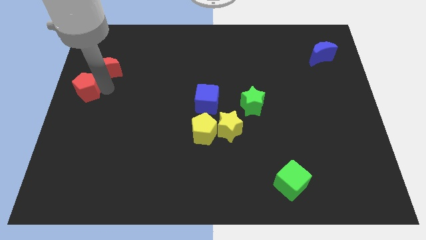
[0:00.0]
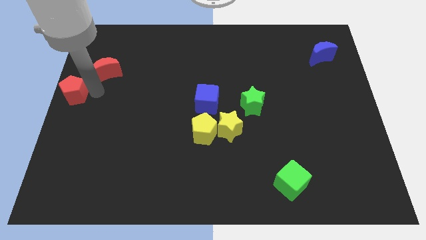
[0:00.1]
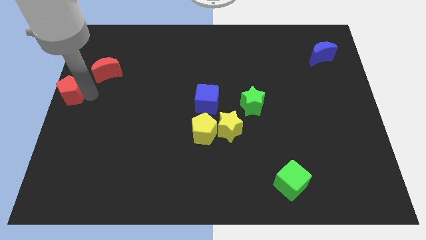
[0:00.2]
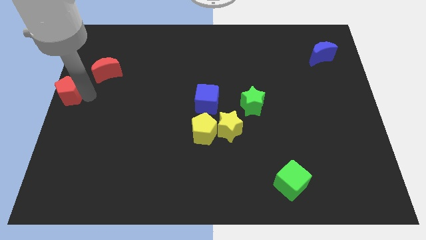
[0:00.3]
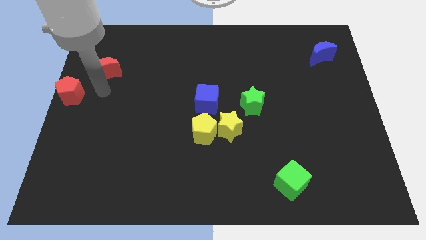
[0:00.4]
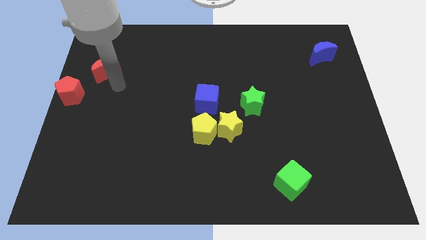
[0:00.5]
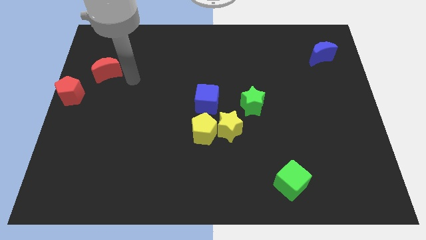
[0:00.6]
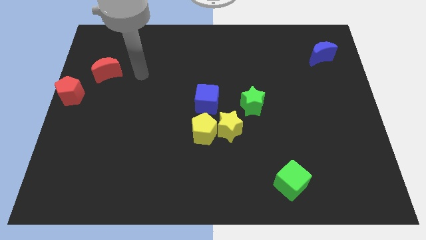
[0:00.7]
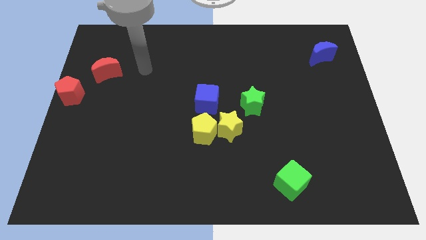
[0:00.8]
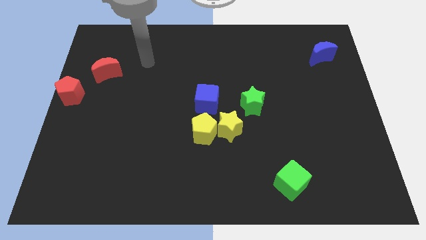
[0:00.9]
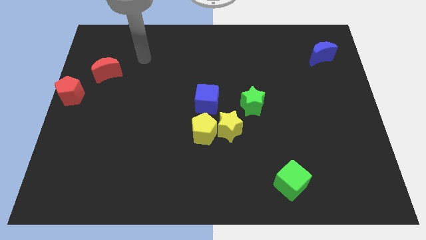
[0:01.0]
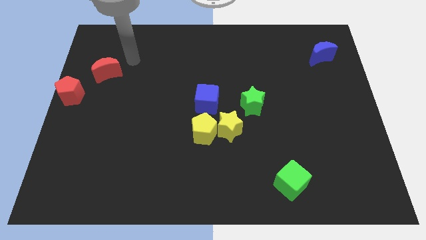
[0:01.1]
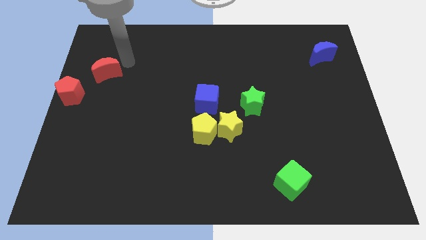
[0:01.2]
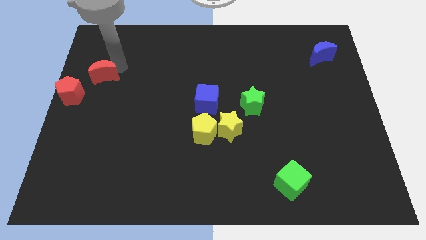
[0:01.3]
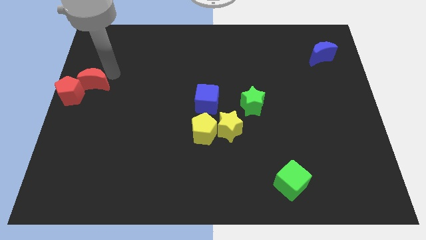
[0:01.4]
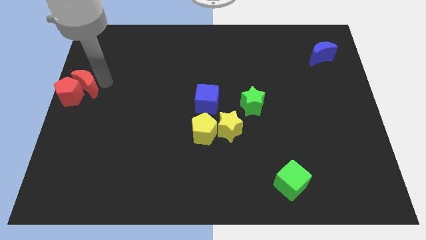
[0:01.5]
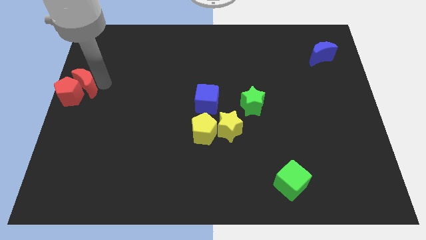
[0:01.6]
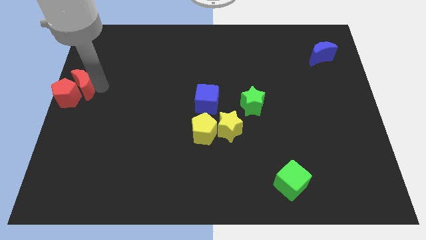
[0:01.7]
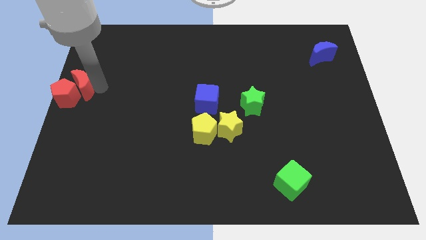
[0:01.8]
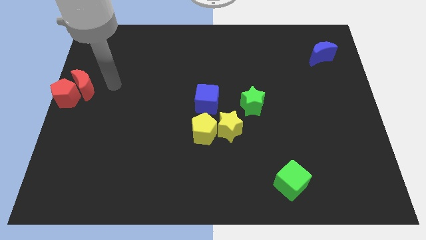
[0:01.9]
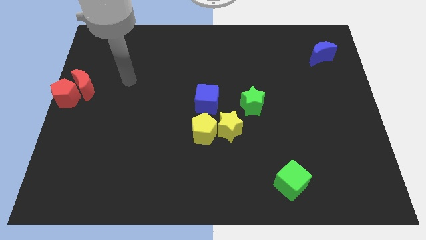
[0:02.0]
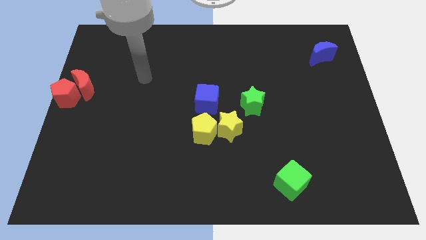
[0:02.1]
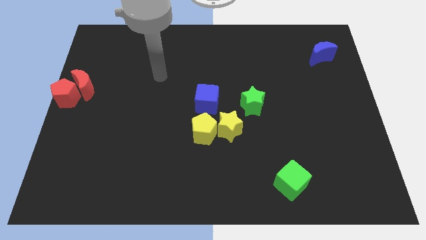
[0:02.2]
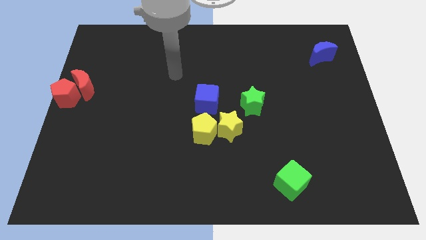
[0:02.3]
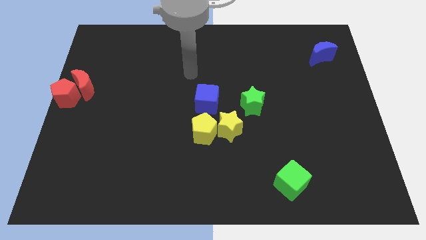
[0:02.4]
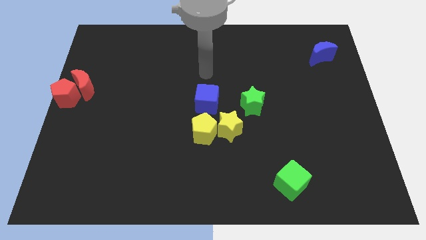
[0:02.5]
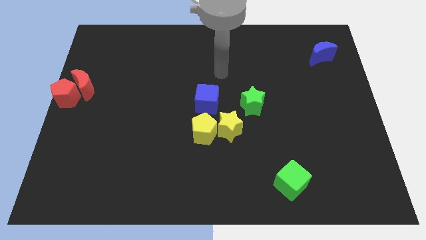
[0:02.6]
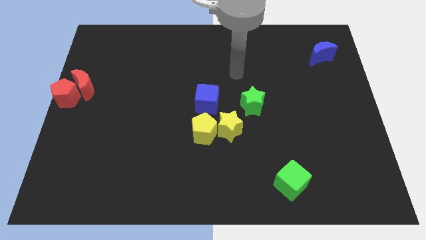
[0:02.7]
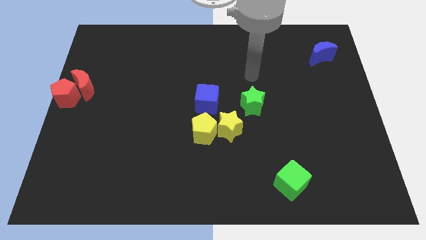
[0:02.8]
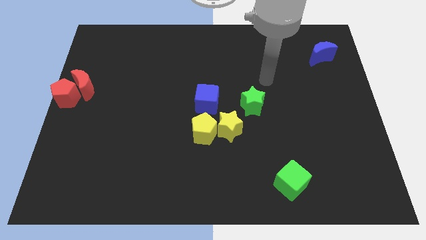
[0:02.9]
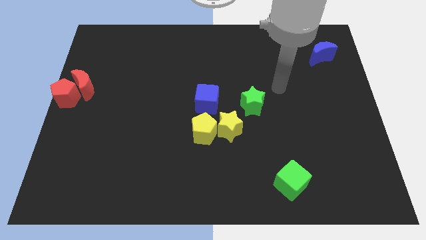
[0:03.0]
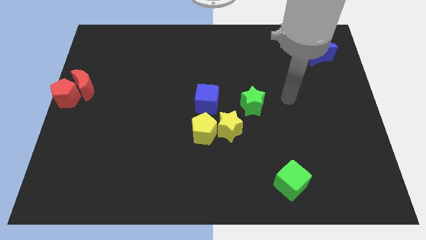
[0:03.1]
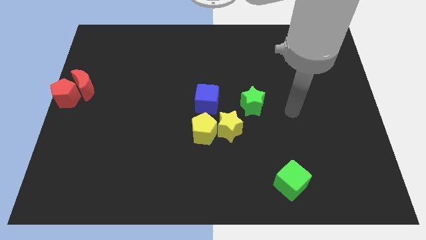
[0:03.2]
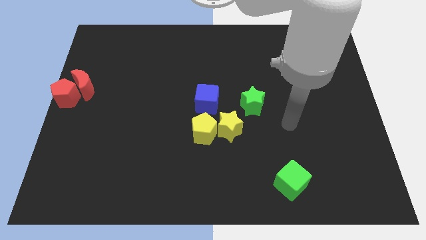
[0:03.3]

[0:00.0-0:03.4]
slide the red moon into the red pentagon

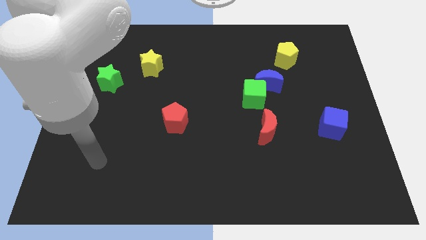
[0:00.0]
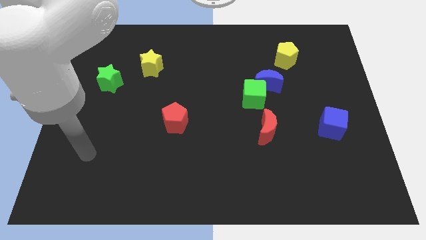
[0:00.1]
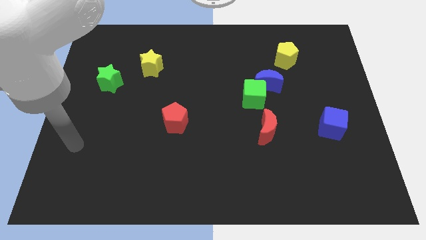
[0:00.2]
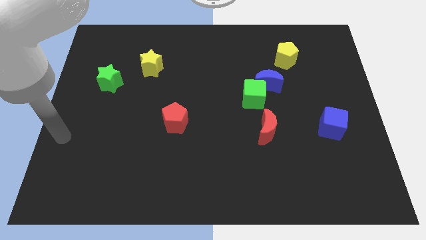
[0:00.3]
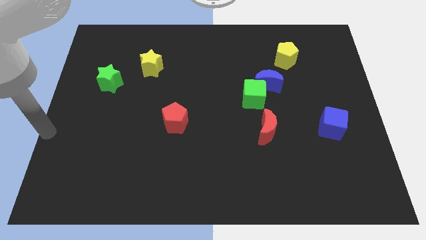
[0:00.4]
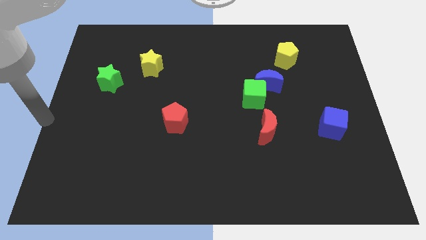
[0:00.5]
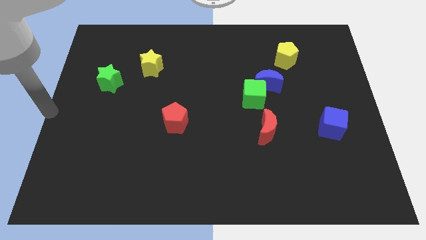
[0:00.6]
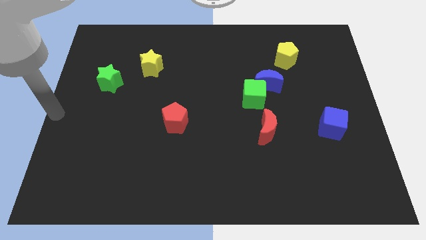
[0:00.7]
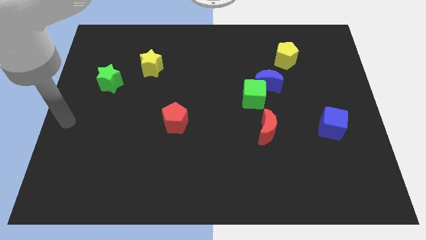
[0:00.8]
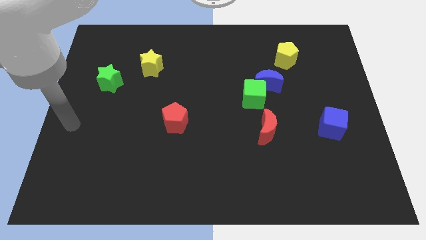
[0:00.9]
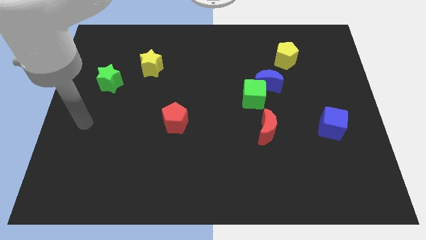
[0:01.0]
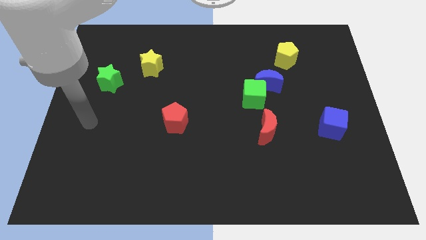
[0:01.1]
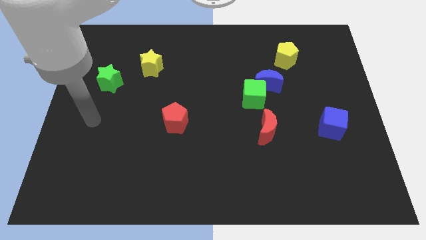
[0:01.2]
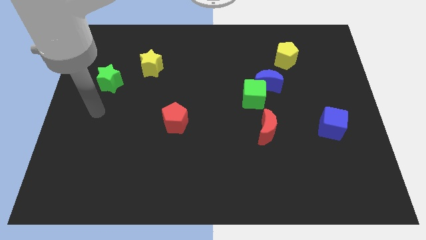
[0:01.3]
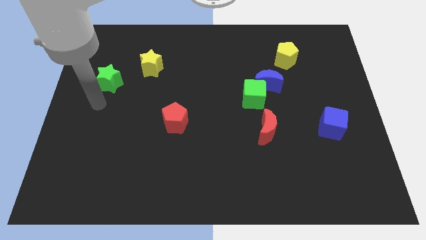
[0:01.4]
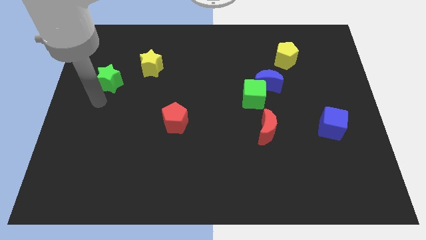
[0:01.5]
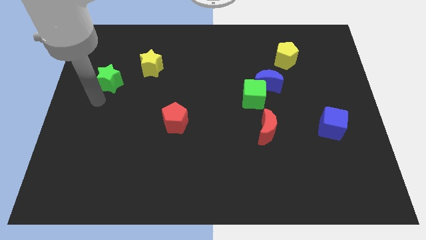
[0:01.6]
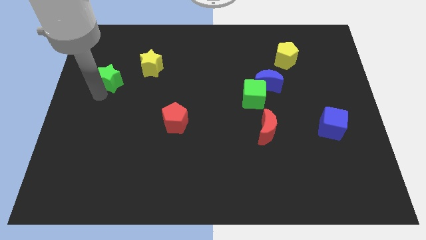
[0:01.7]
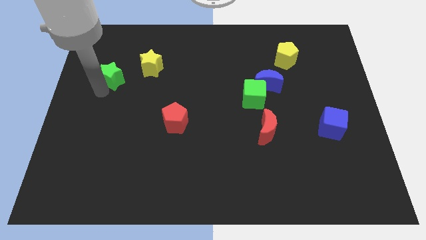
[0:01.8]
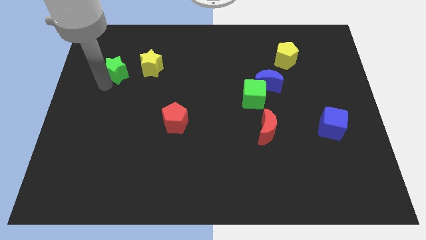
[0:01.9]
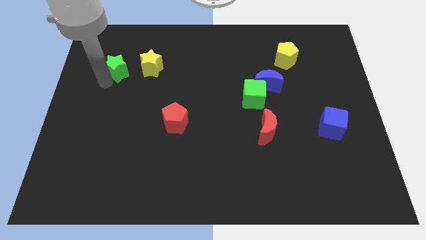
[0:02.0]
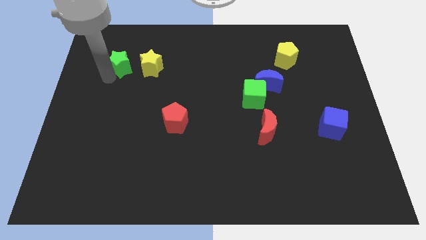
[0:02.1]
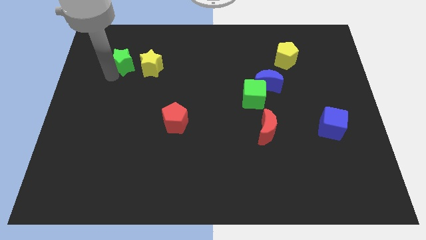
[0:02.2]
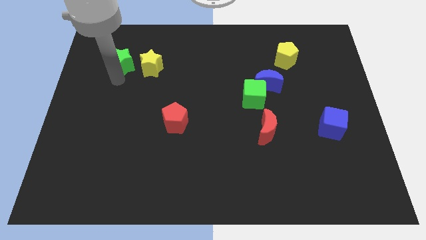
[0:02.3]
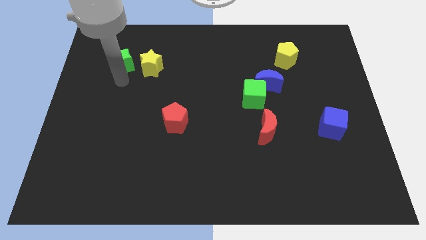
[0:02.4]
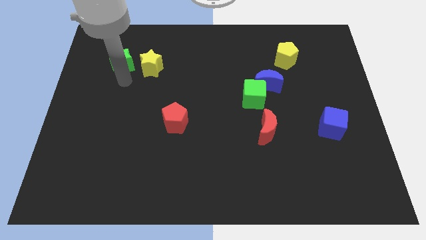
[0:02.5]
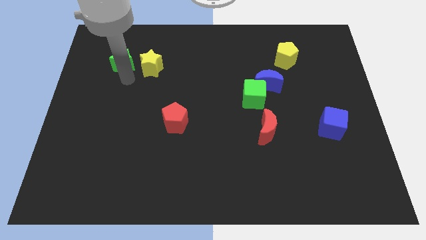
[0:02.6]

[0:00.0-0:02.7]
push the green star on the left side of the yellow star

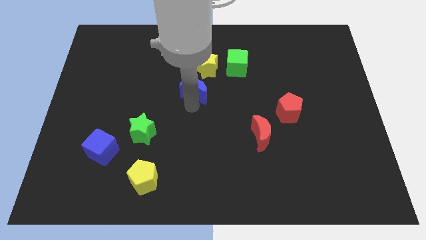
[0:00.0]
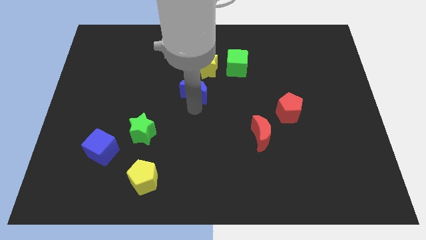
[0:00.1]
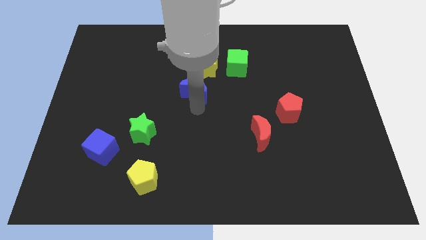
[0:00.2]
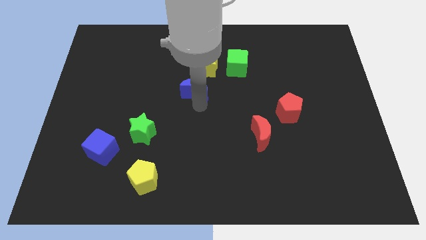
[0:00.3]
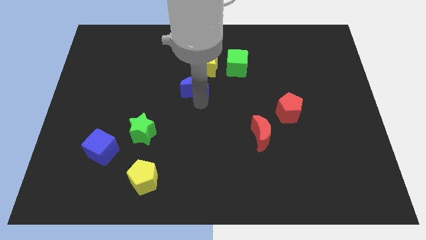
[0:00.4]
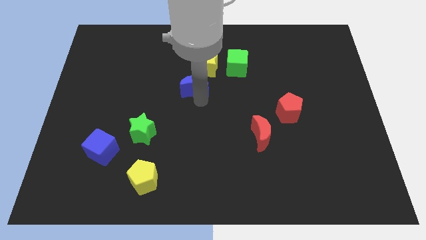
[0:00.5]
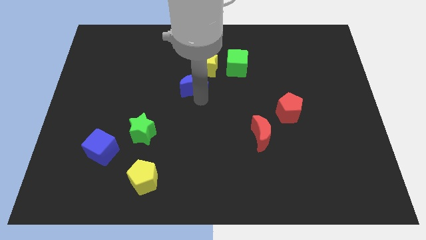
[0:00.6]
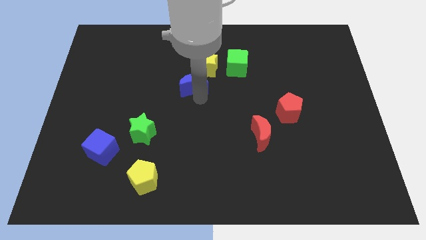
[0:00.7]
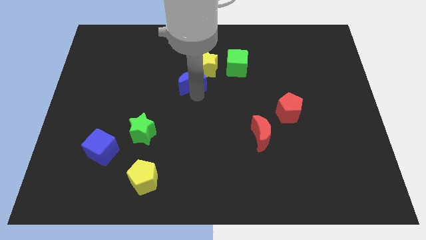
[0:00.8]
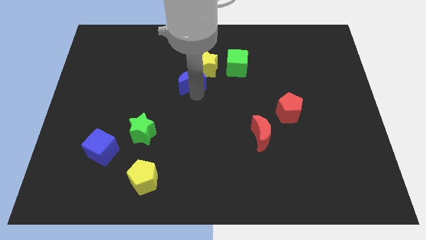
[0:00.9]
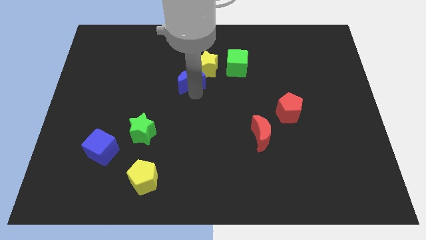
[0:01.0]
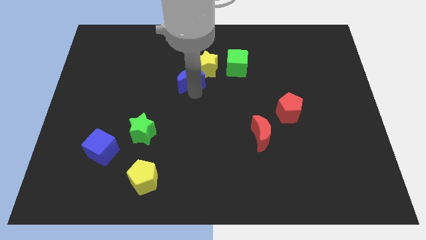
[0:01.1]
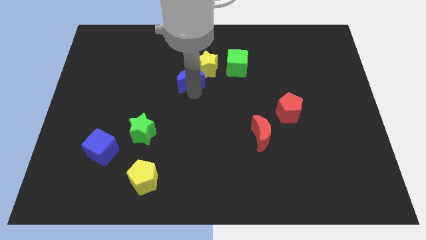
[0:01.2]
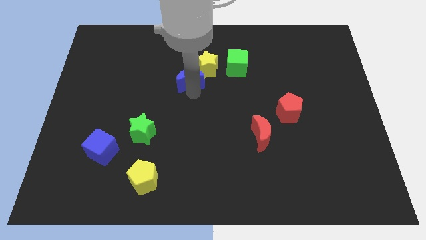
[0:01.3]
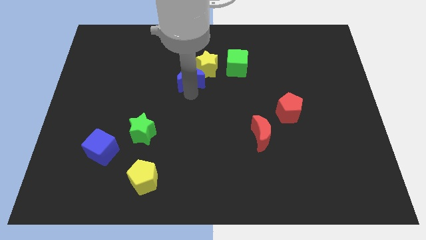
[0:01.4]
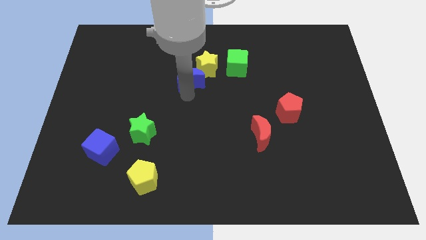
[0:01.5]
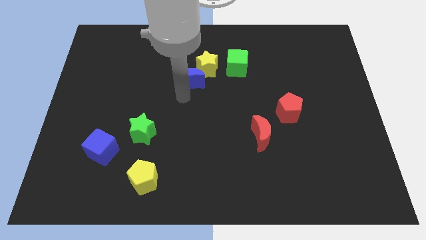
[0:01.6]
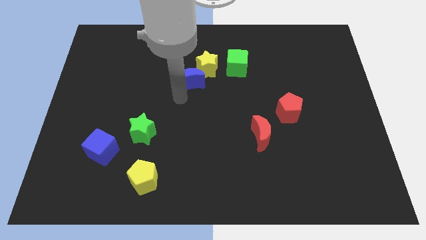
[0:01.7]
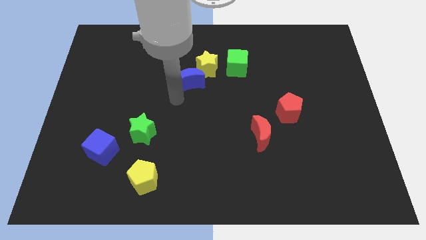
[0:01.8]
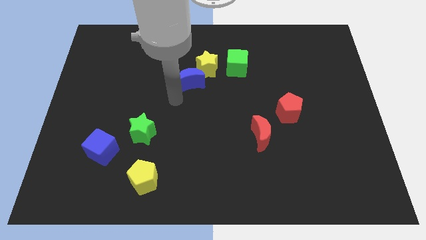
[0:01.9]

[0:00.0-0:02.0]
put the blue crescent to the bottom left side of the yellow star

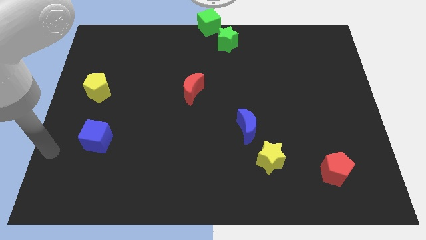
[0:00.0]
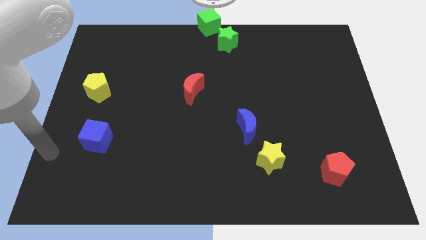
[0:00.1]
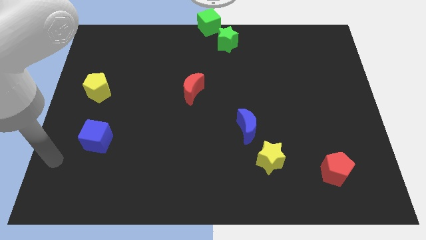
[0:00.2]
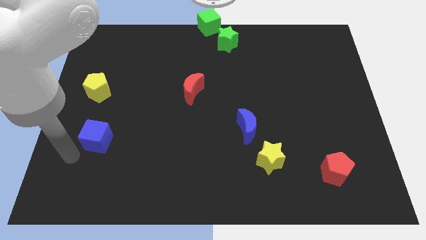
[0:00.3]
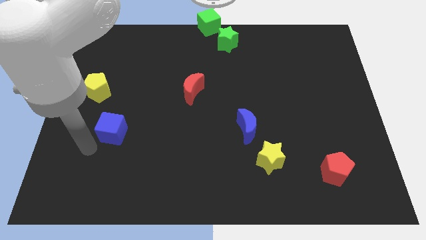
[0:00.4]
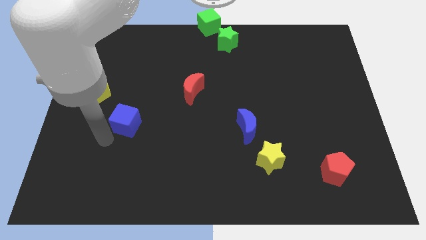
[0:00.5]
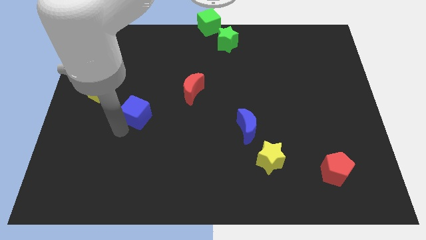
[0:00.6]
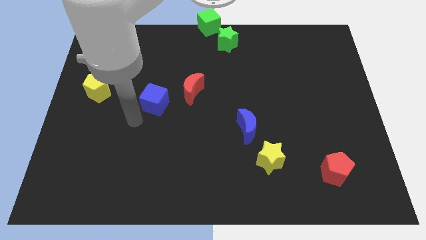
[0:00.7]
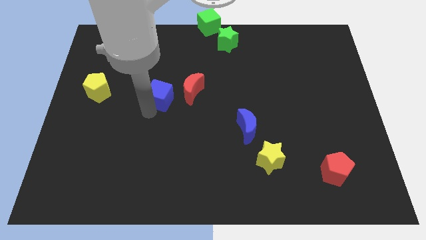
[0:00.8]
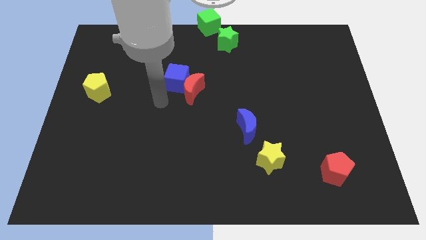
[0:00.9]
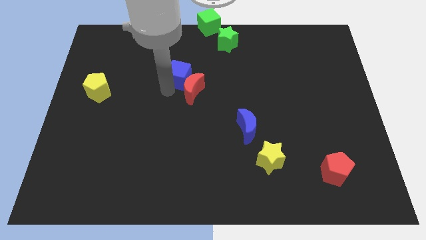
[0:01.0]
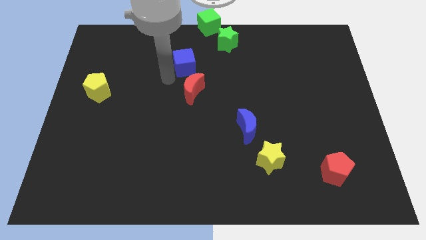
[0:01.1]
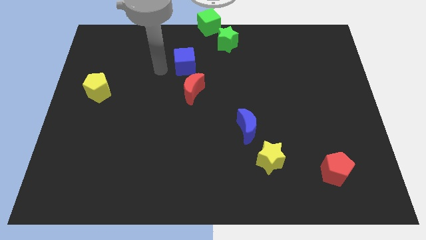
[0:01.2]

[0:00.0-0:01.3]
place blue cube above the red moon
